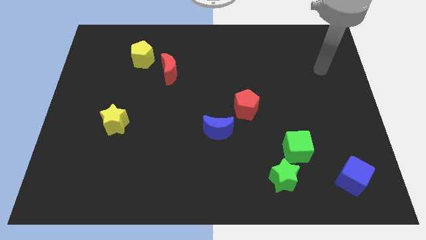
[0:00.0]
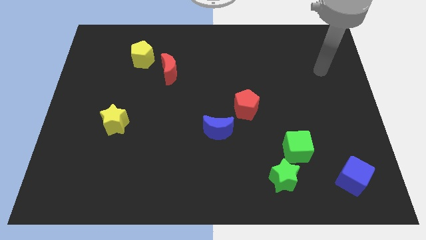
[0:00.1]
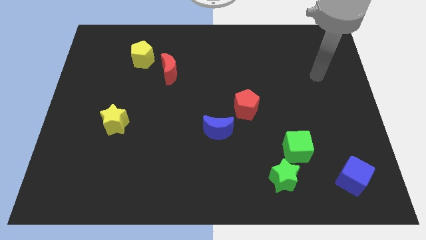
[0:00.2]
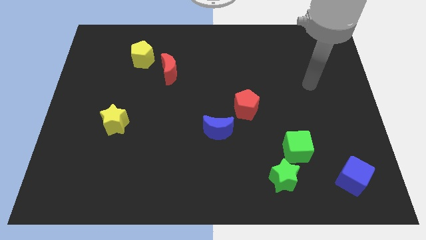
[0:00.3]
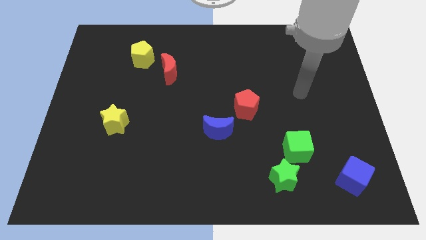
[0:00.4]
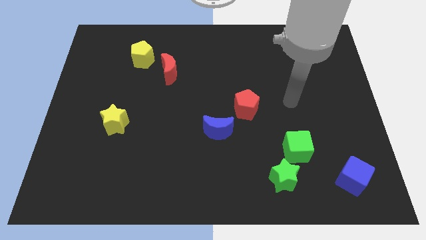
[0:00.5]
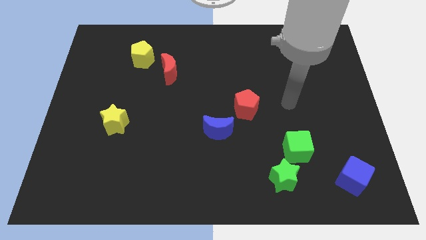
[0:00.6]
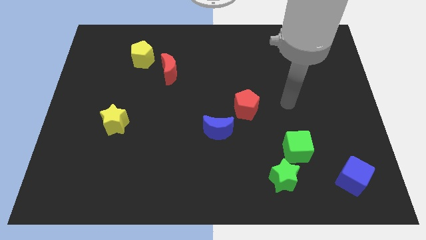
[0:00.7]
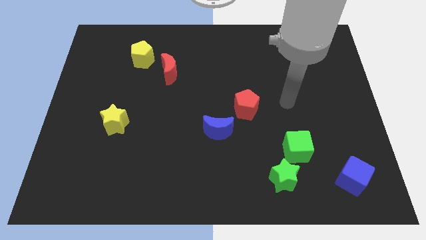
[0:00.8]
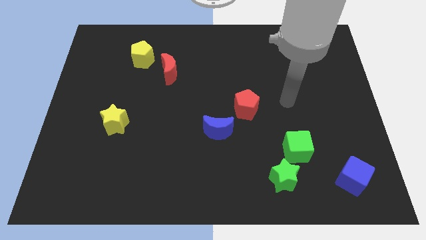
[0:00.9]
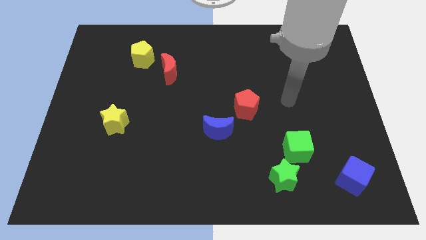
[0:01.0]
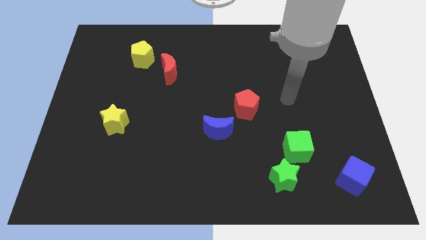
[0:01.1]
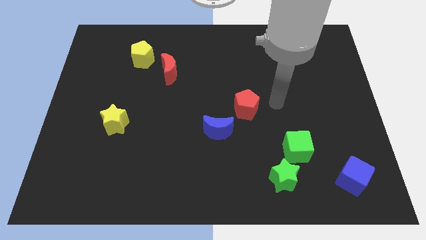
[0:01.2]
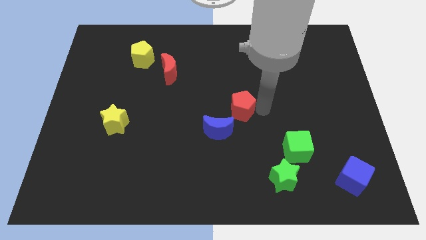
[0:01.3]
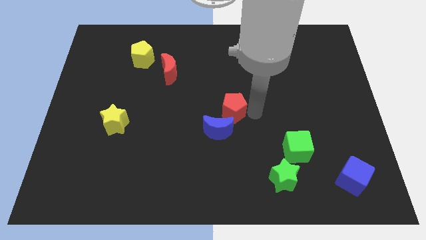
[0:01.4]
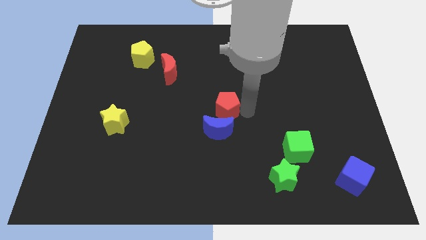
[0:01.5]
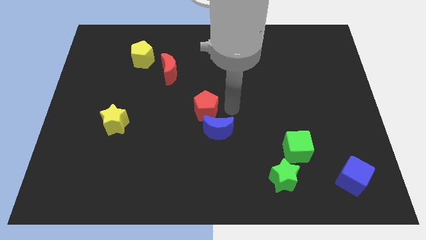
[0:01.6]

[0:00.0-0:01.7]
move the red pentagon to the left

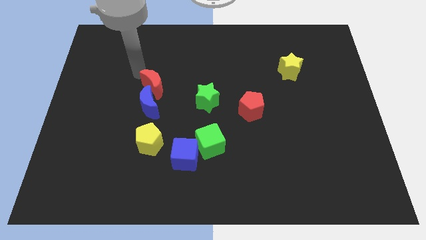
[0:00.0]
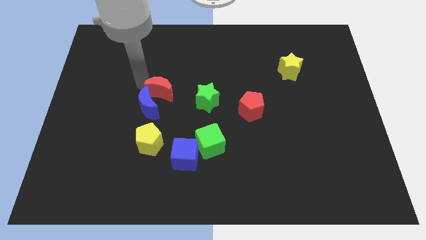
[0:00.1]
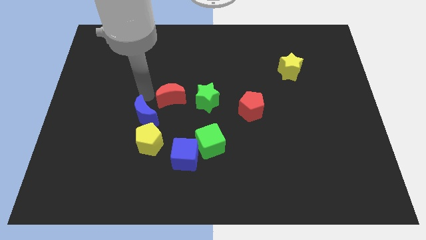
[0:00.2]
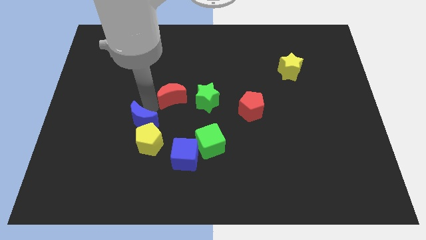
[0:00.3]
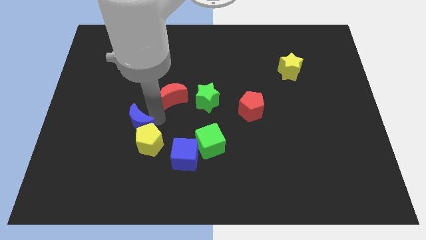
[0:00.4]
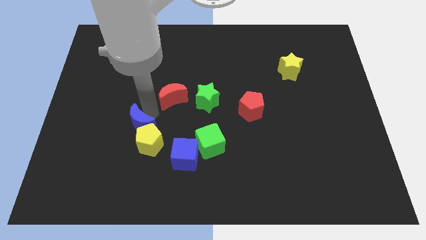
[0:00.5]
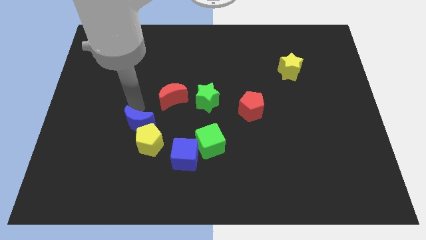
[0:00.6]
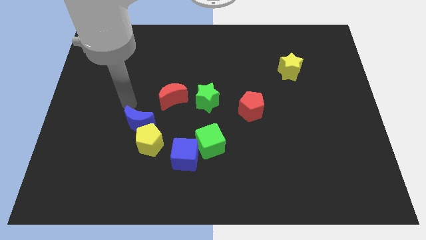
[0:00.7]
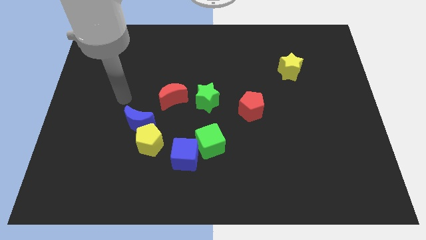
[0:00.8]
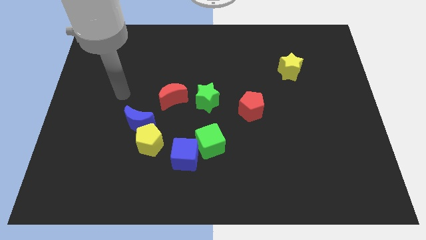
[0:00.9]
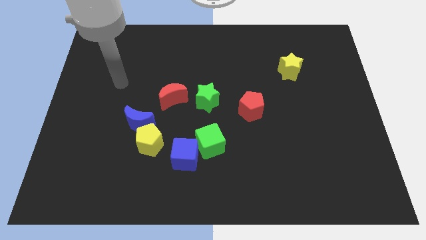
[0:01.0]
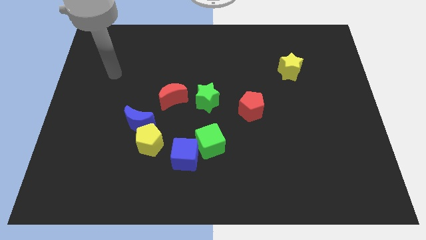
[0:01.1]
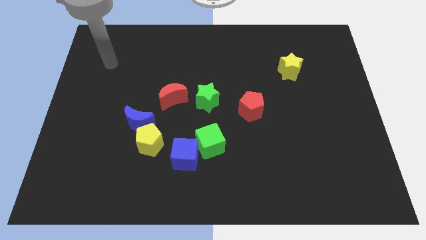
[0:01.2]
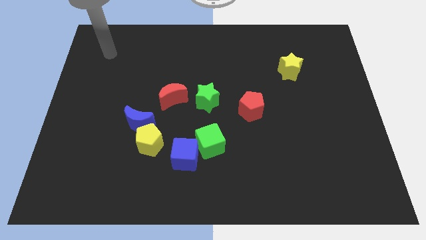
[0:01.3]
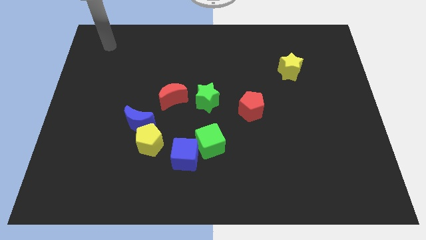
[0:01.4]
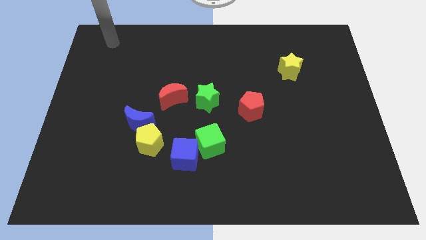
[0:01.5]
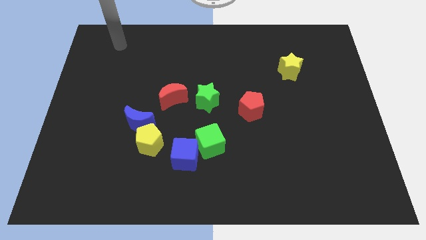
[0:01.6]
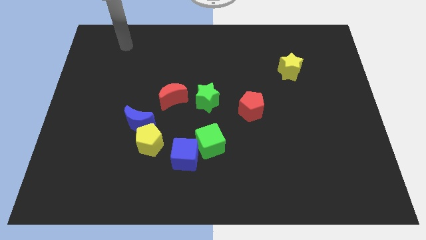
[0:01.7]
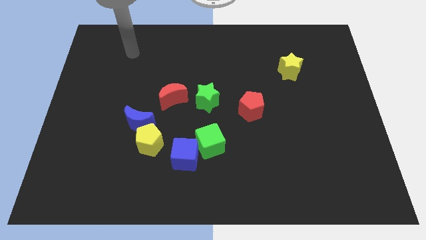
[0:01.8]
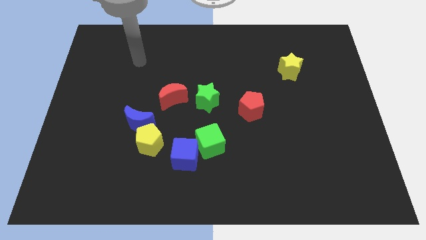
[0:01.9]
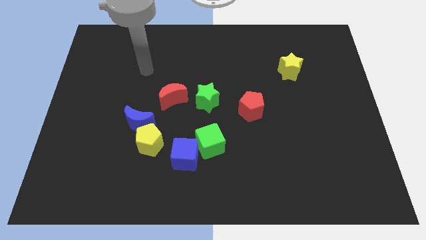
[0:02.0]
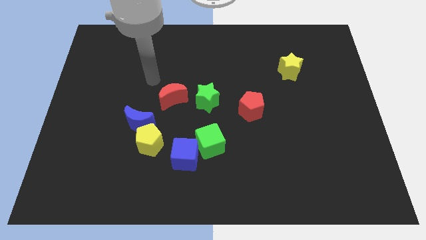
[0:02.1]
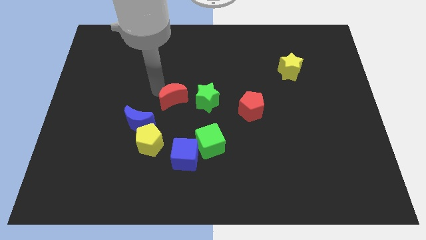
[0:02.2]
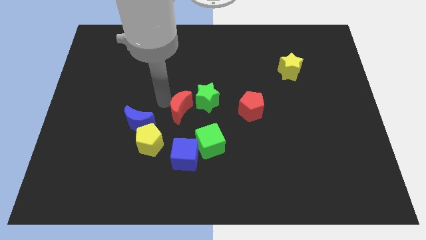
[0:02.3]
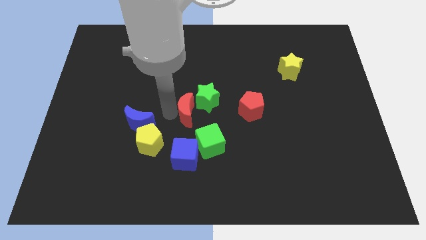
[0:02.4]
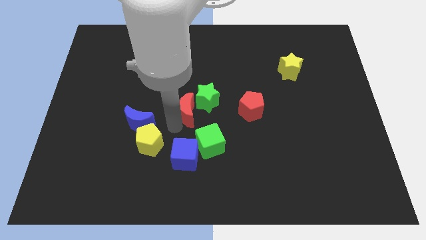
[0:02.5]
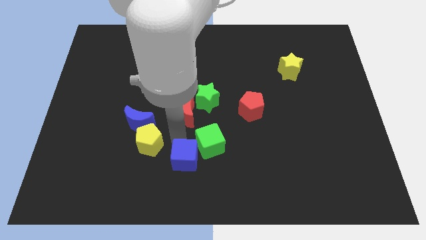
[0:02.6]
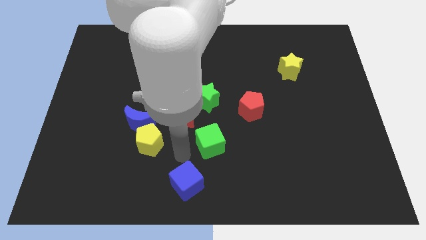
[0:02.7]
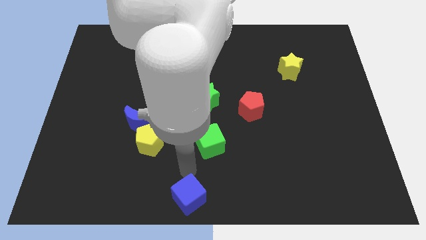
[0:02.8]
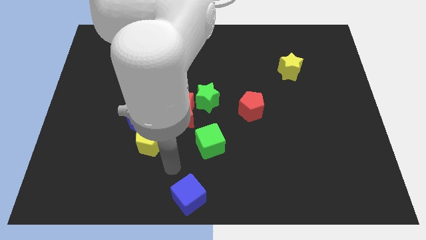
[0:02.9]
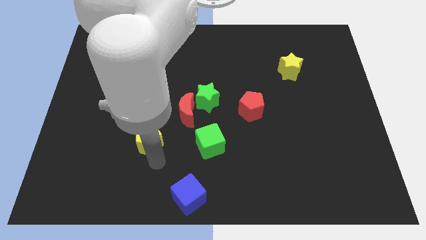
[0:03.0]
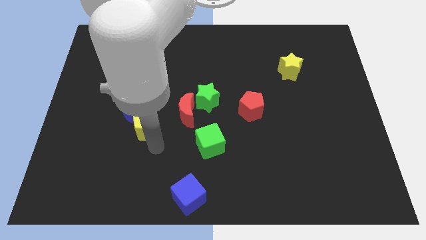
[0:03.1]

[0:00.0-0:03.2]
move the blue cube to the bottom center of the board

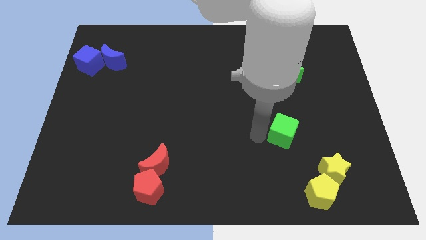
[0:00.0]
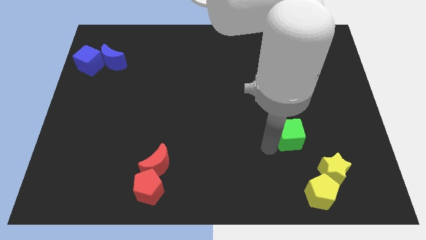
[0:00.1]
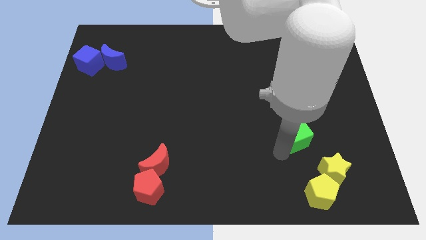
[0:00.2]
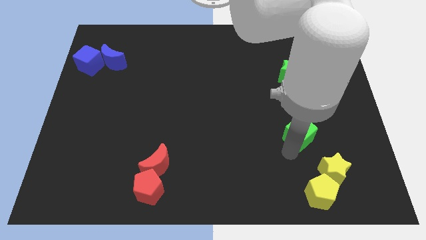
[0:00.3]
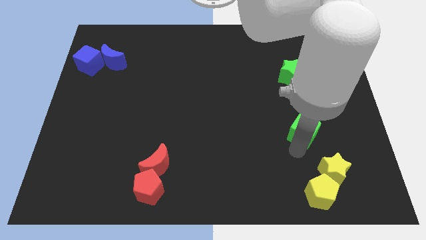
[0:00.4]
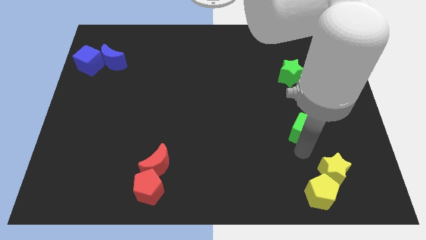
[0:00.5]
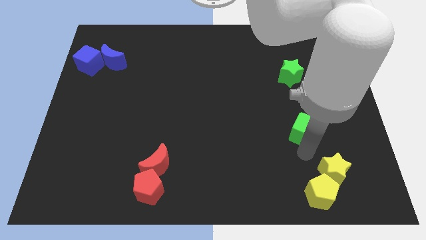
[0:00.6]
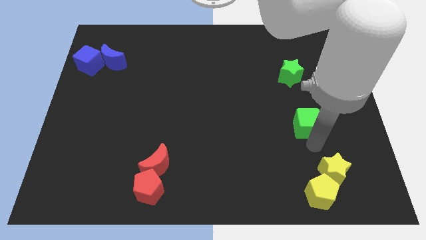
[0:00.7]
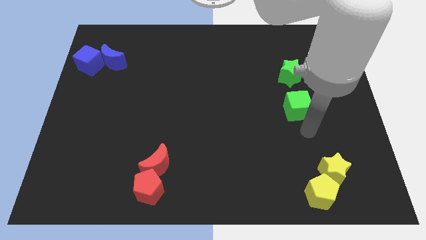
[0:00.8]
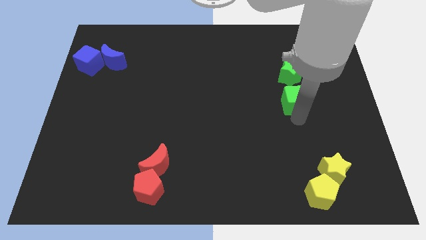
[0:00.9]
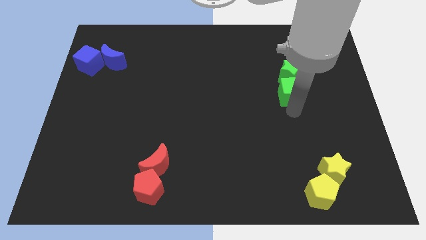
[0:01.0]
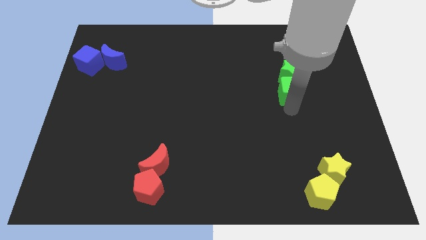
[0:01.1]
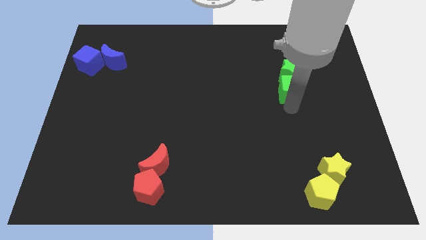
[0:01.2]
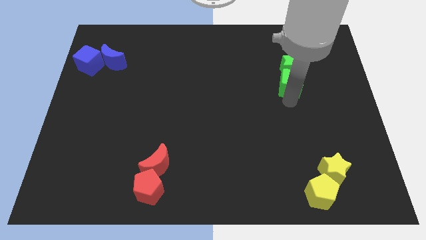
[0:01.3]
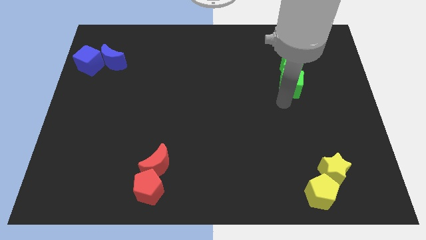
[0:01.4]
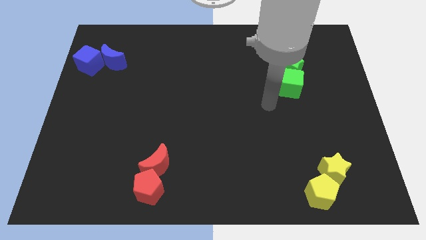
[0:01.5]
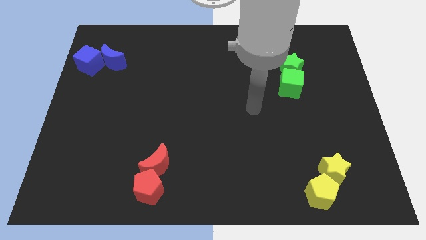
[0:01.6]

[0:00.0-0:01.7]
place the green cube to the bottom of the green star

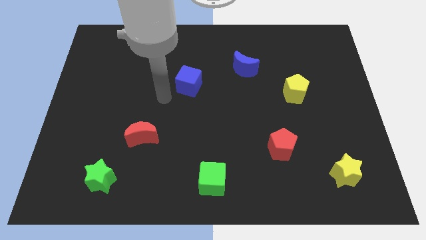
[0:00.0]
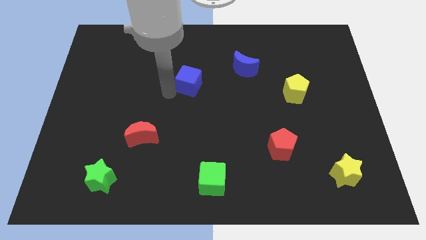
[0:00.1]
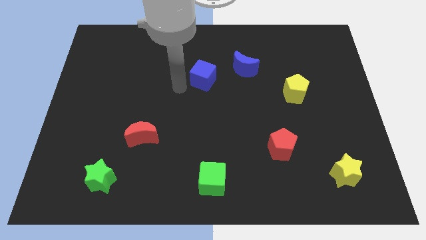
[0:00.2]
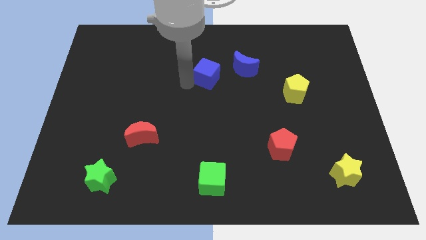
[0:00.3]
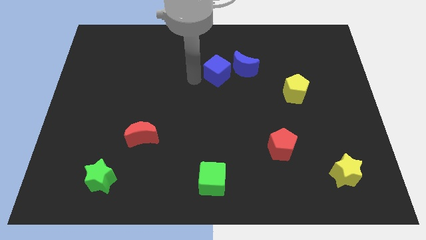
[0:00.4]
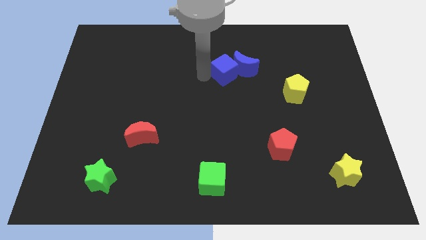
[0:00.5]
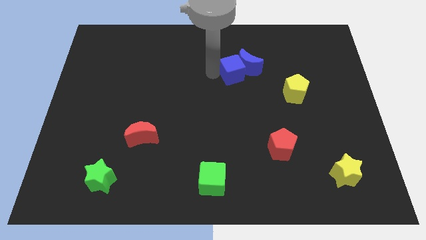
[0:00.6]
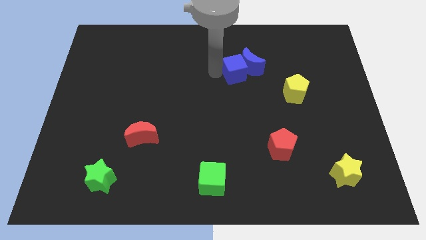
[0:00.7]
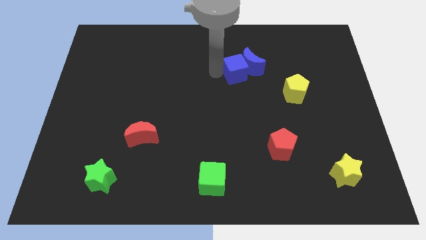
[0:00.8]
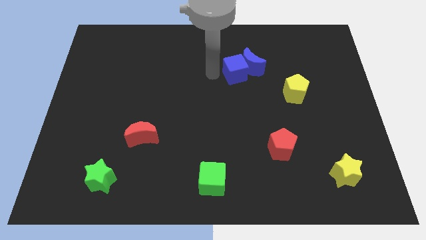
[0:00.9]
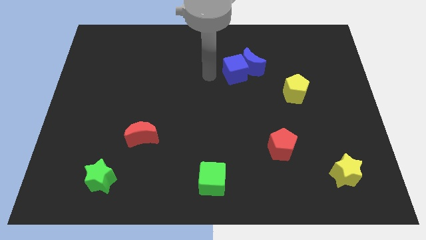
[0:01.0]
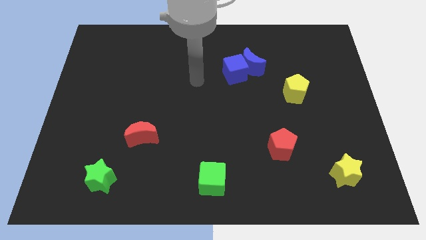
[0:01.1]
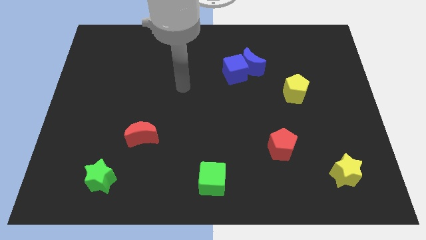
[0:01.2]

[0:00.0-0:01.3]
make the blue cube to touch the right side of the blue crescent

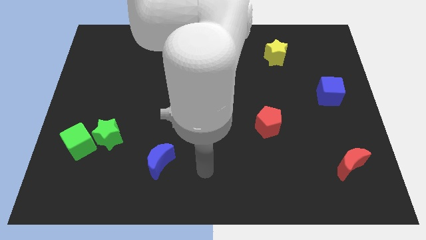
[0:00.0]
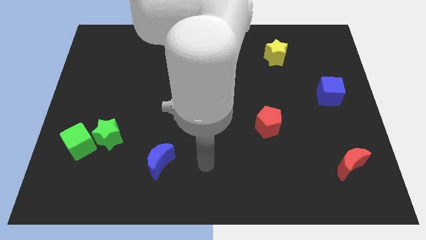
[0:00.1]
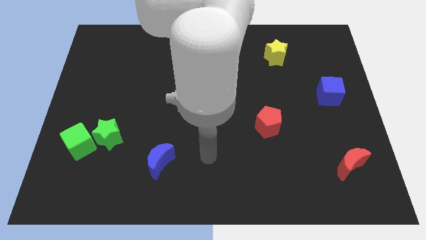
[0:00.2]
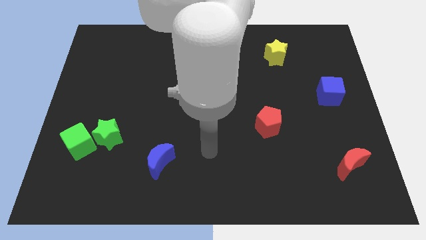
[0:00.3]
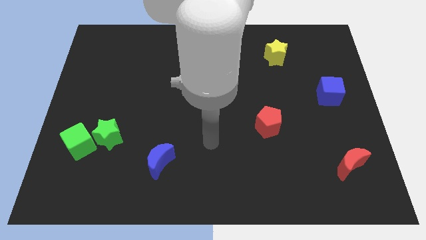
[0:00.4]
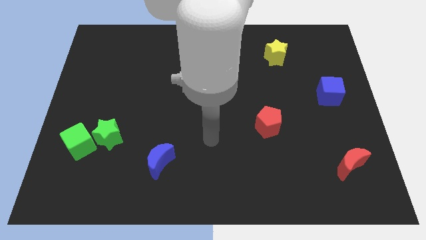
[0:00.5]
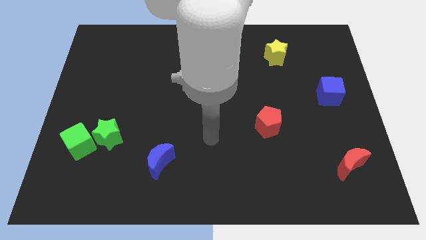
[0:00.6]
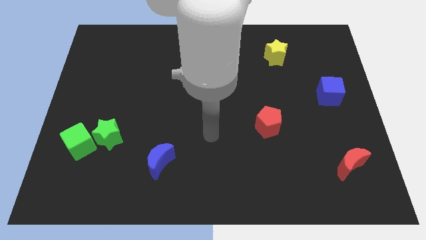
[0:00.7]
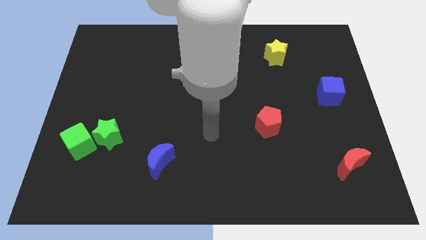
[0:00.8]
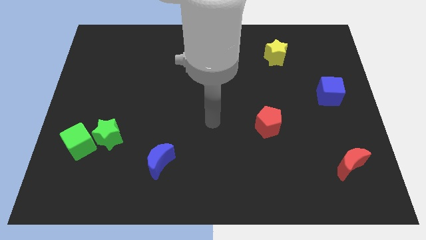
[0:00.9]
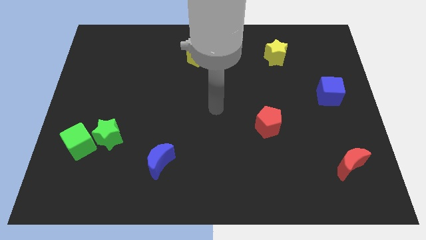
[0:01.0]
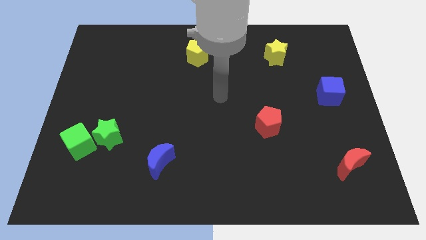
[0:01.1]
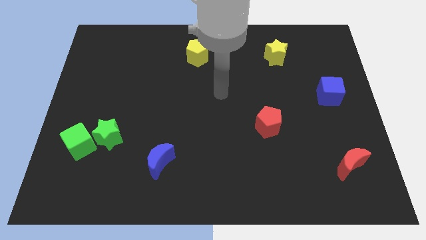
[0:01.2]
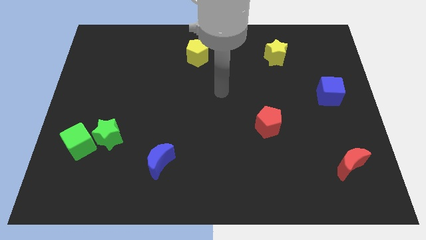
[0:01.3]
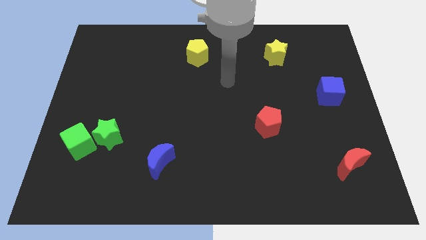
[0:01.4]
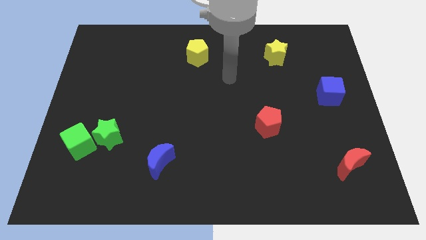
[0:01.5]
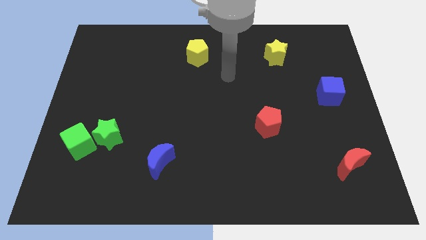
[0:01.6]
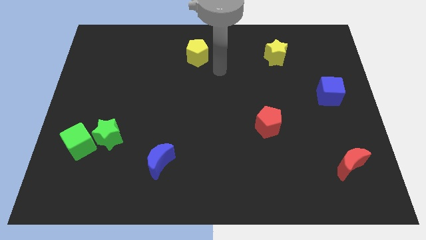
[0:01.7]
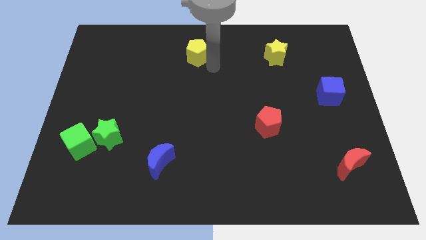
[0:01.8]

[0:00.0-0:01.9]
move the arm to the bottom of the yellow pentagon
